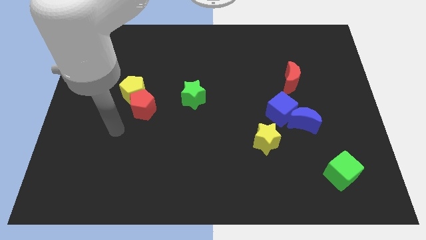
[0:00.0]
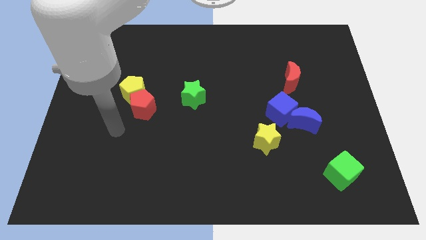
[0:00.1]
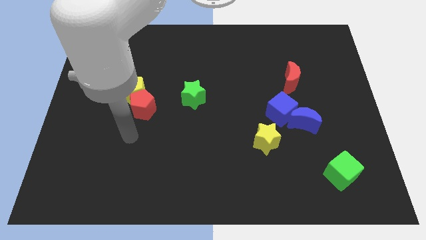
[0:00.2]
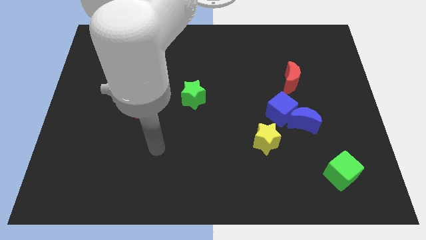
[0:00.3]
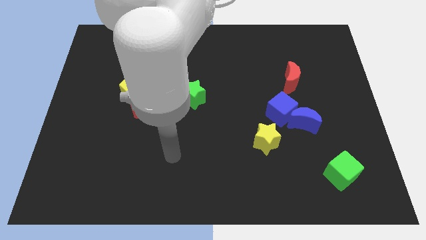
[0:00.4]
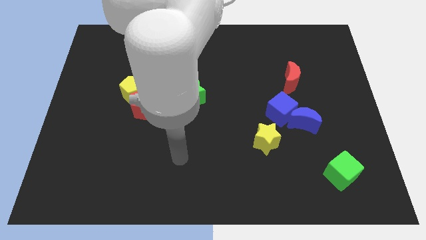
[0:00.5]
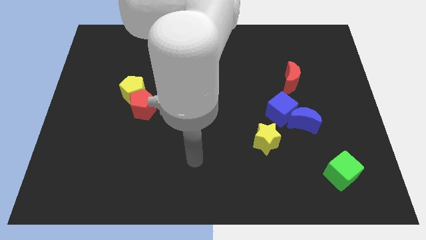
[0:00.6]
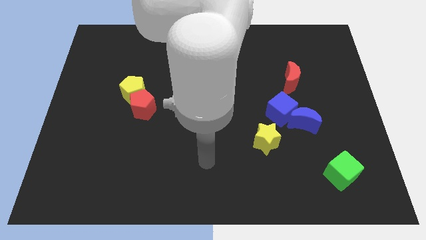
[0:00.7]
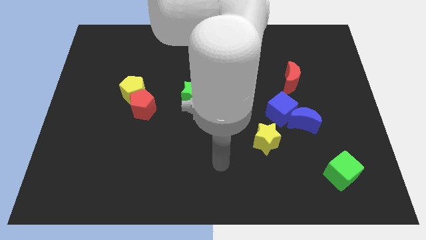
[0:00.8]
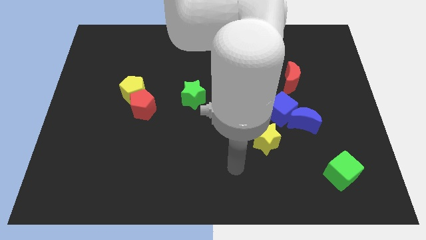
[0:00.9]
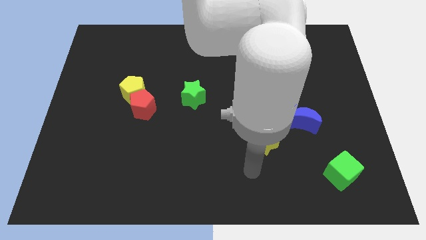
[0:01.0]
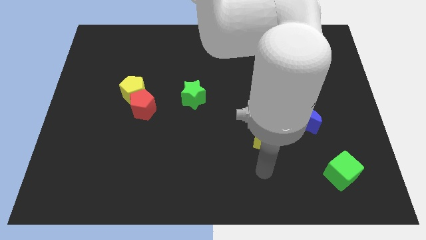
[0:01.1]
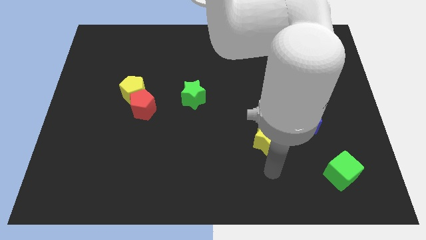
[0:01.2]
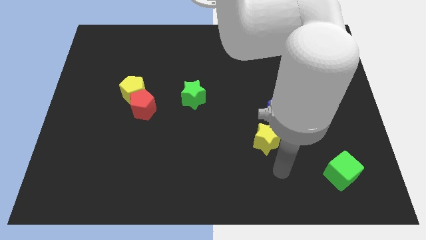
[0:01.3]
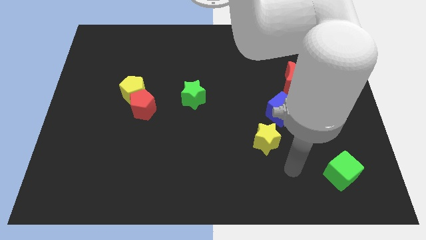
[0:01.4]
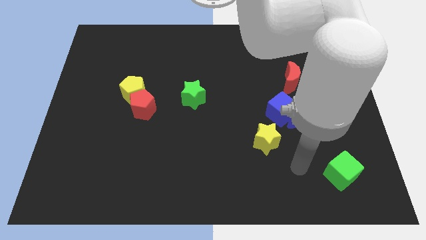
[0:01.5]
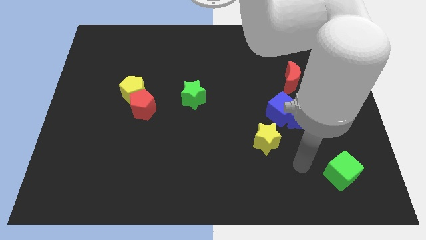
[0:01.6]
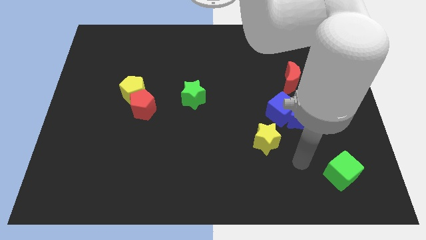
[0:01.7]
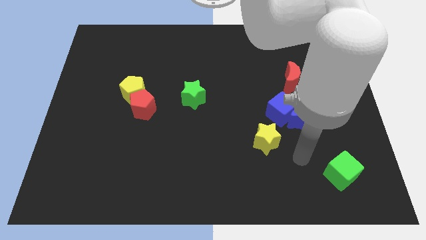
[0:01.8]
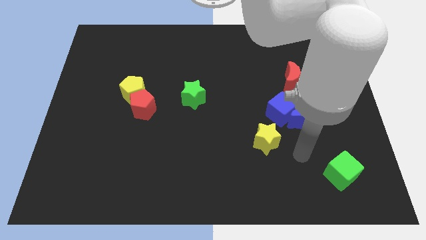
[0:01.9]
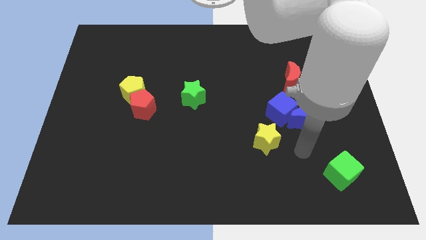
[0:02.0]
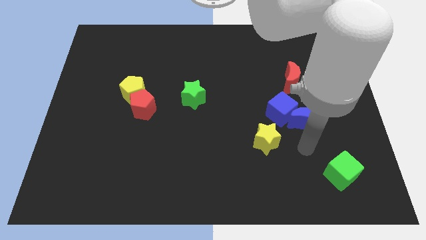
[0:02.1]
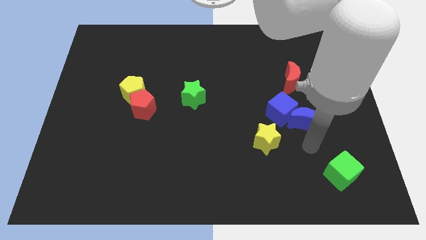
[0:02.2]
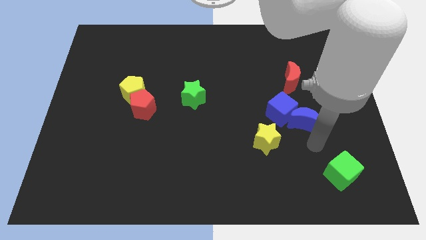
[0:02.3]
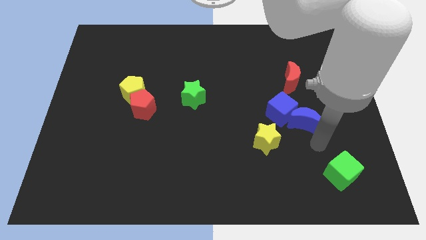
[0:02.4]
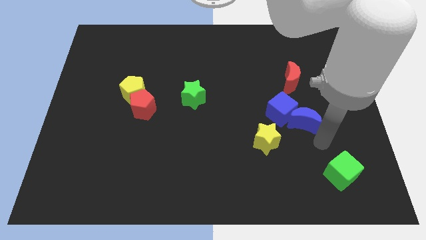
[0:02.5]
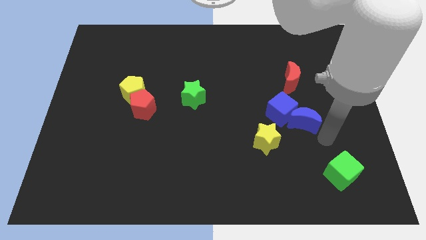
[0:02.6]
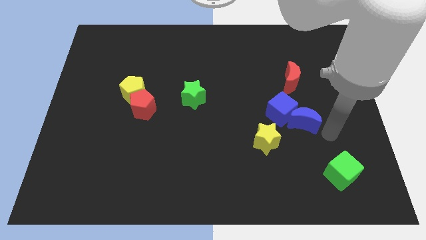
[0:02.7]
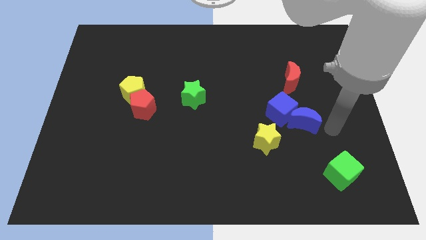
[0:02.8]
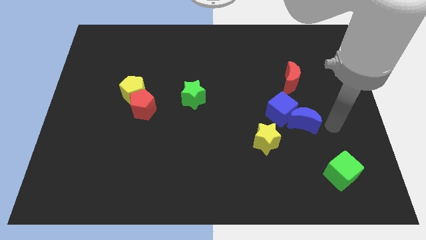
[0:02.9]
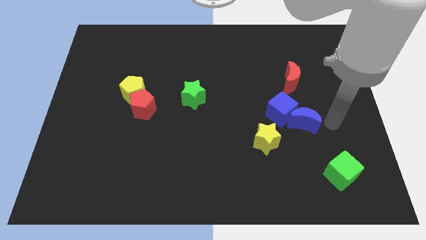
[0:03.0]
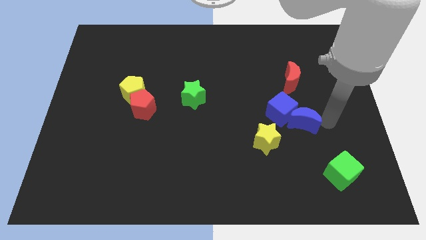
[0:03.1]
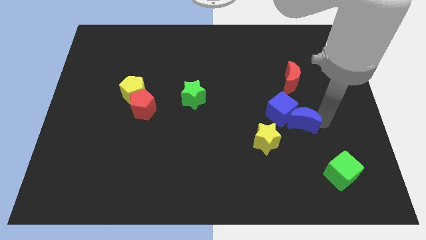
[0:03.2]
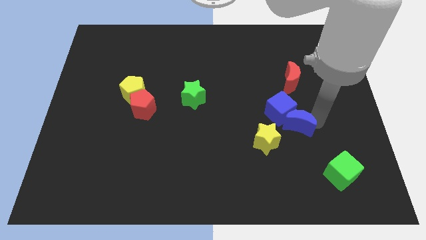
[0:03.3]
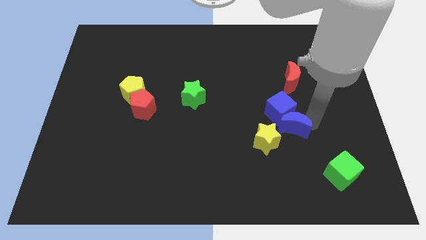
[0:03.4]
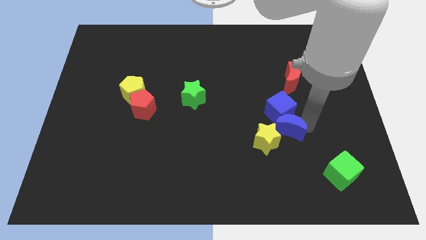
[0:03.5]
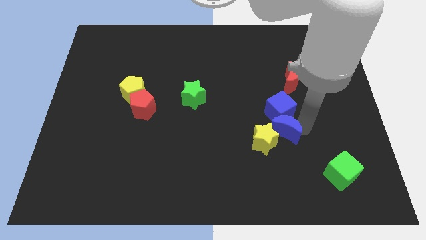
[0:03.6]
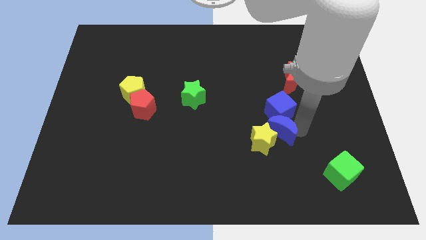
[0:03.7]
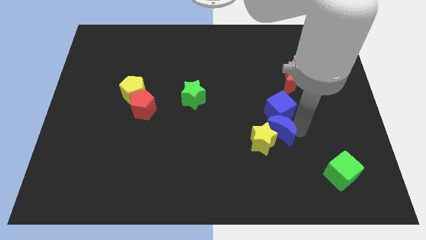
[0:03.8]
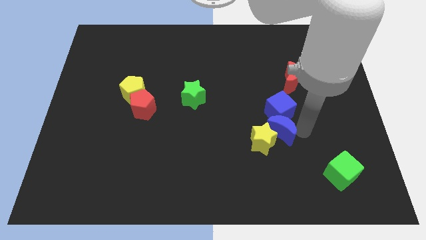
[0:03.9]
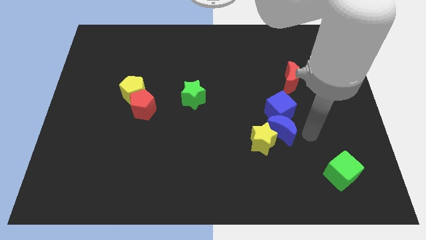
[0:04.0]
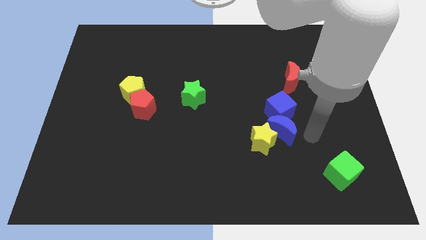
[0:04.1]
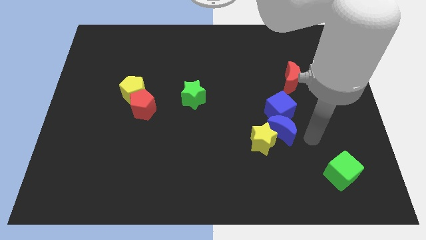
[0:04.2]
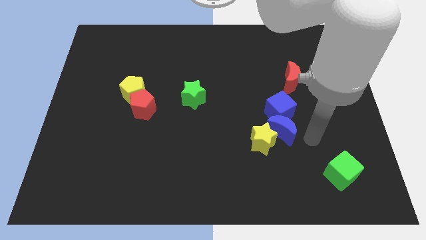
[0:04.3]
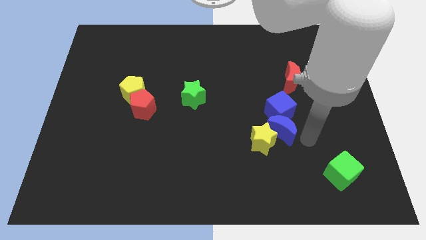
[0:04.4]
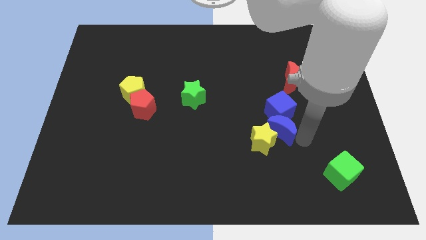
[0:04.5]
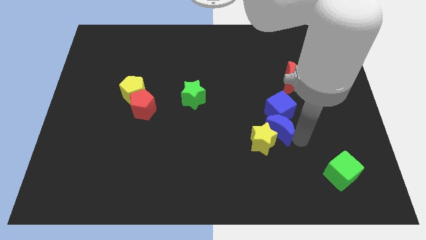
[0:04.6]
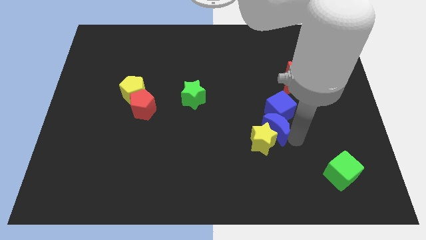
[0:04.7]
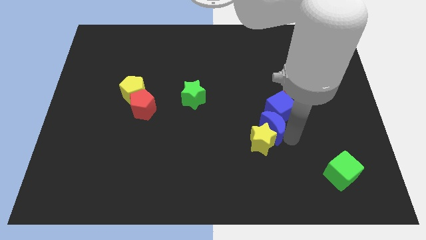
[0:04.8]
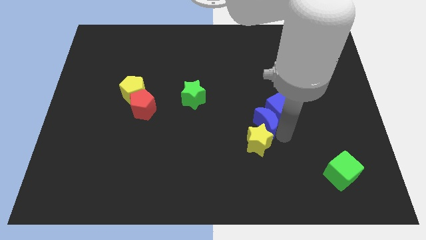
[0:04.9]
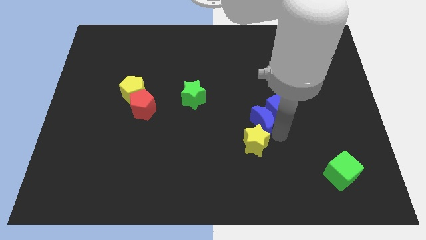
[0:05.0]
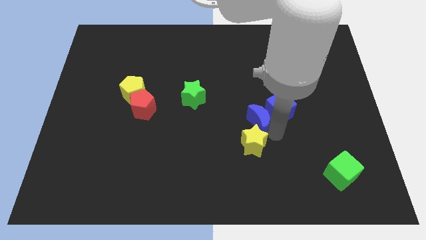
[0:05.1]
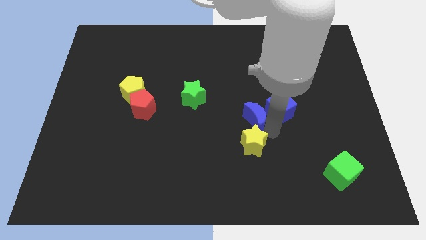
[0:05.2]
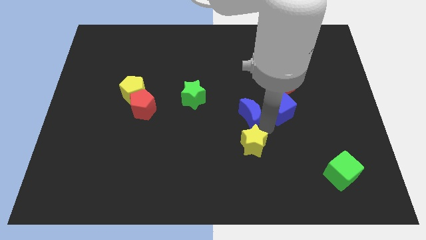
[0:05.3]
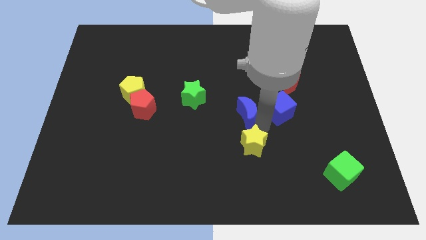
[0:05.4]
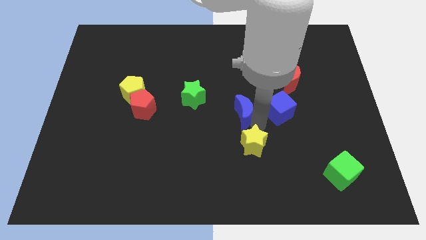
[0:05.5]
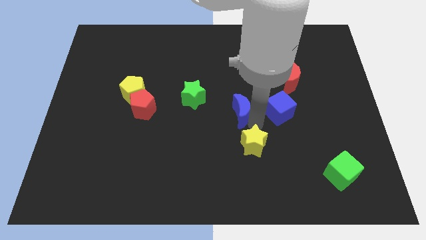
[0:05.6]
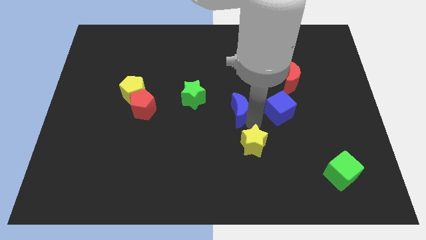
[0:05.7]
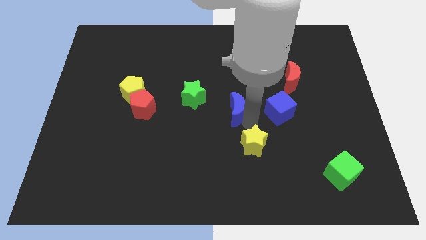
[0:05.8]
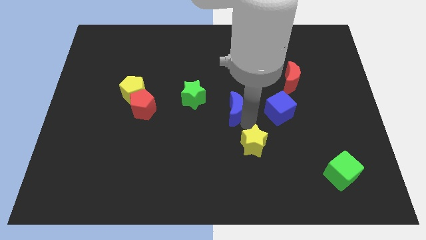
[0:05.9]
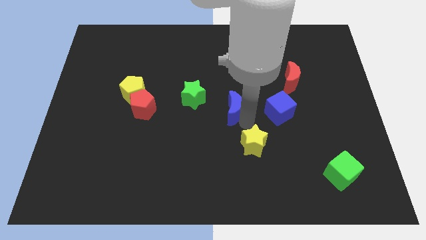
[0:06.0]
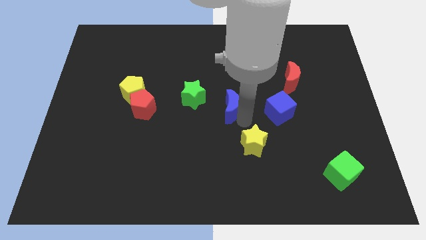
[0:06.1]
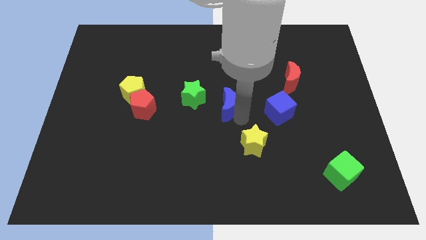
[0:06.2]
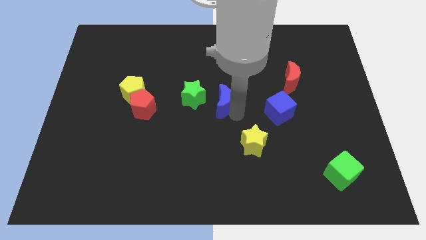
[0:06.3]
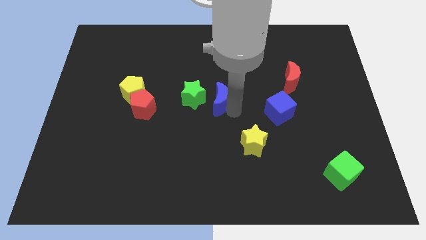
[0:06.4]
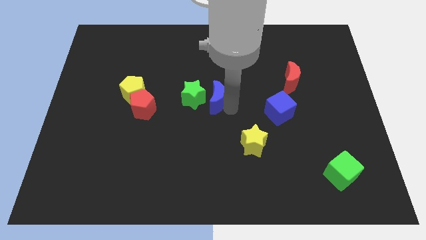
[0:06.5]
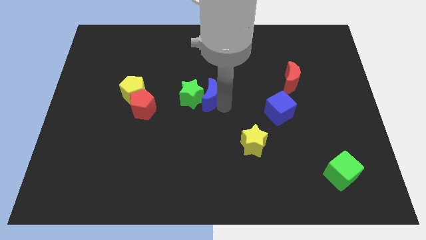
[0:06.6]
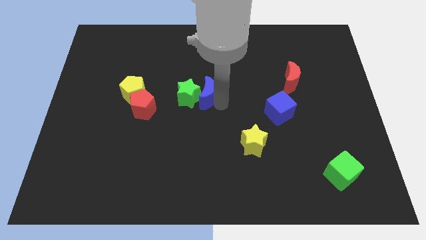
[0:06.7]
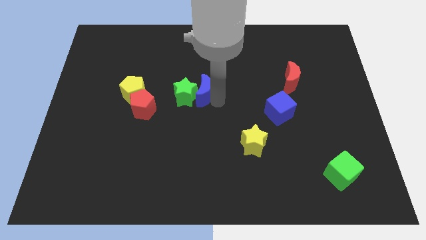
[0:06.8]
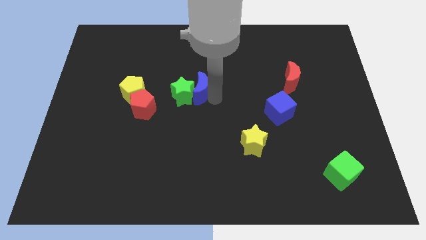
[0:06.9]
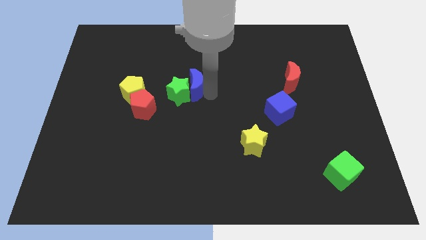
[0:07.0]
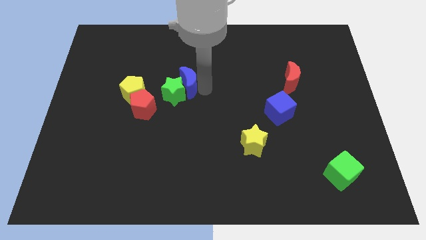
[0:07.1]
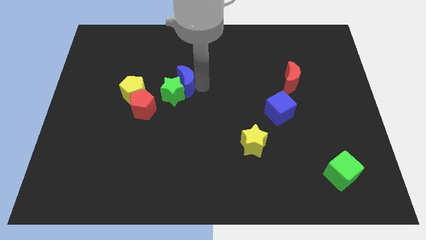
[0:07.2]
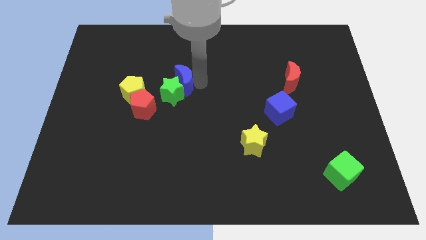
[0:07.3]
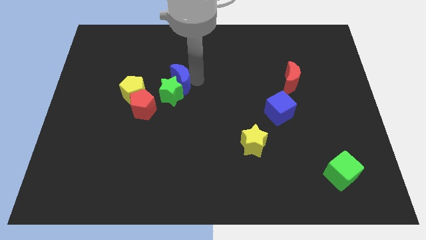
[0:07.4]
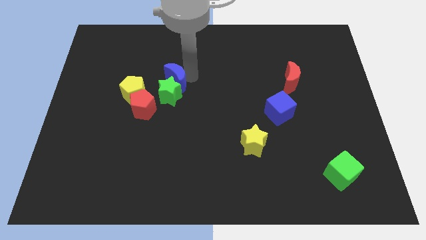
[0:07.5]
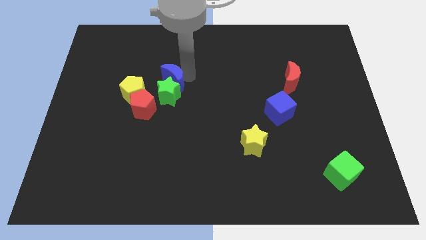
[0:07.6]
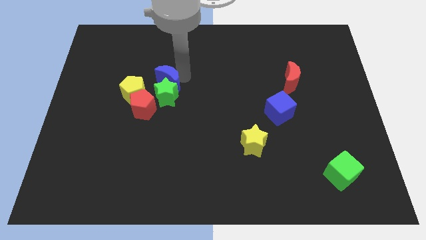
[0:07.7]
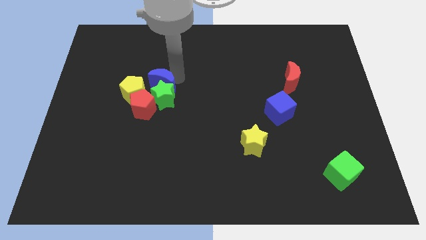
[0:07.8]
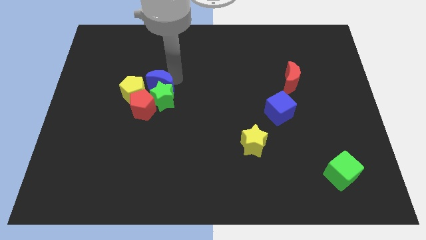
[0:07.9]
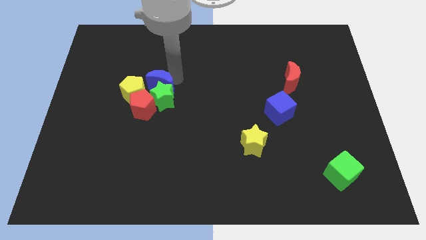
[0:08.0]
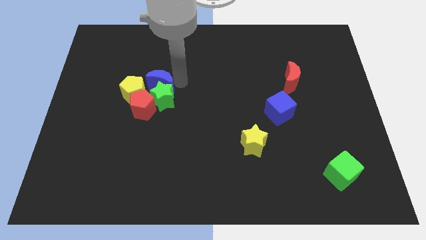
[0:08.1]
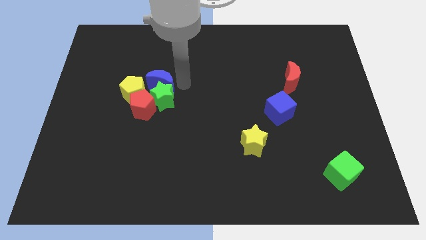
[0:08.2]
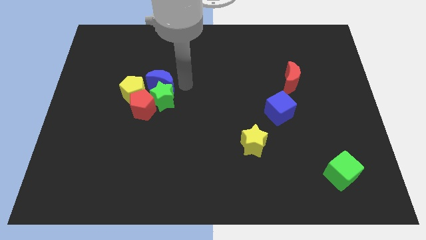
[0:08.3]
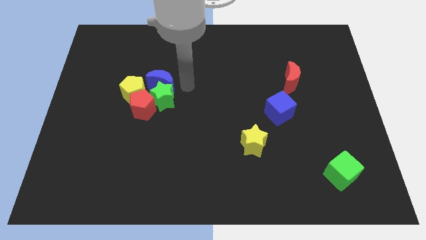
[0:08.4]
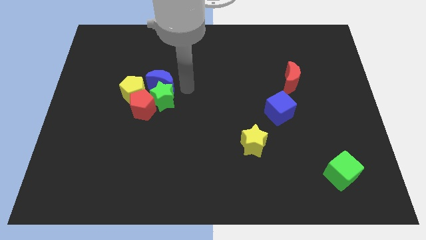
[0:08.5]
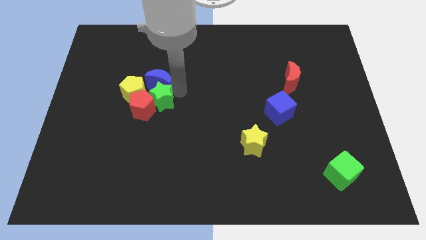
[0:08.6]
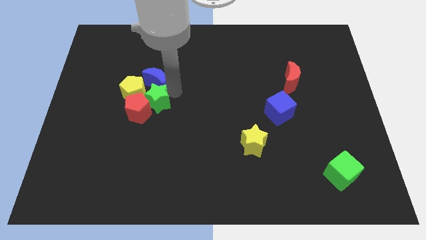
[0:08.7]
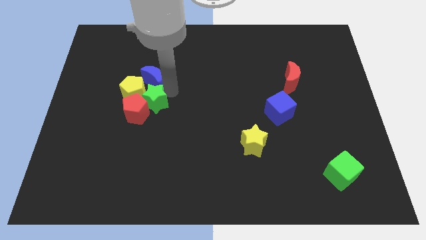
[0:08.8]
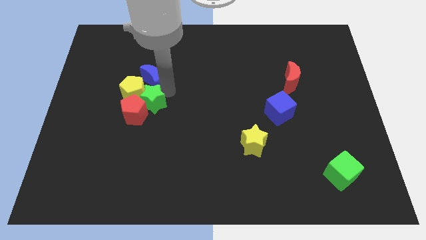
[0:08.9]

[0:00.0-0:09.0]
slide the blue moon to the yellow pentagon
